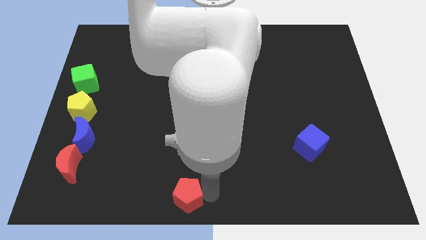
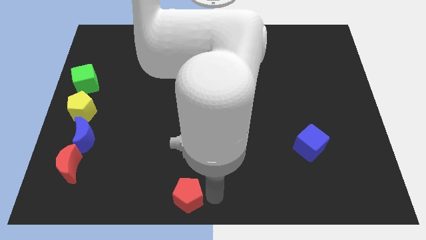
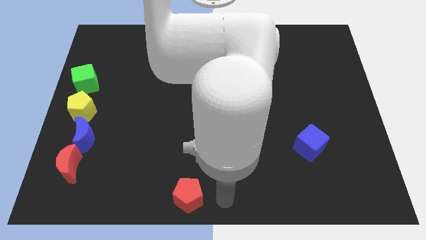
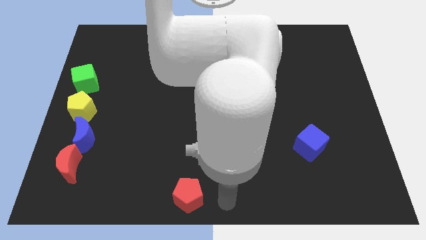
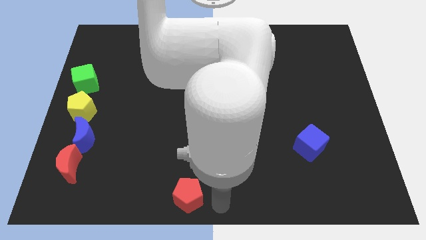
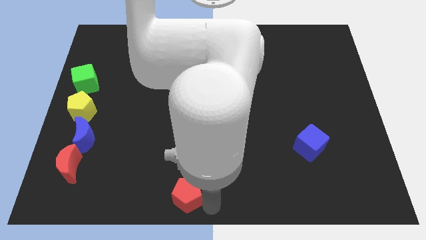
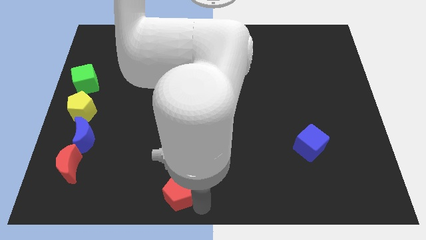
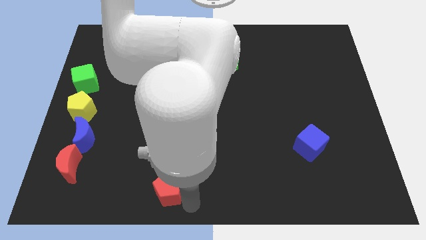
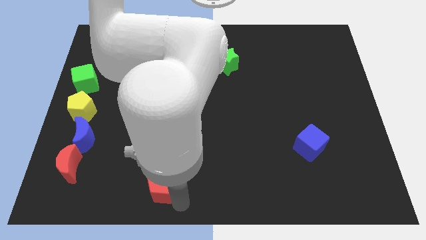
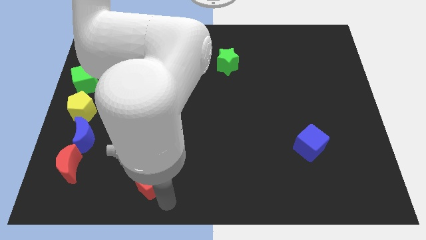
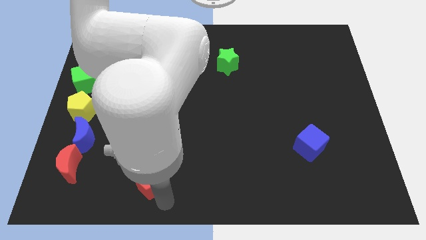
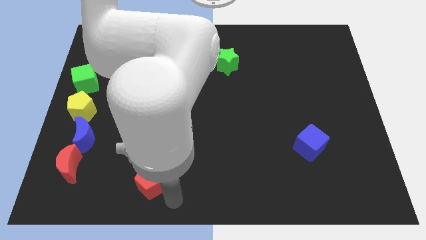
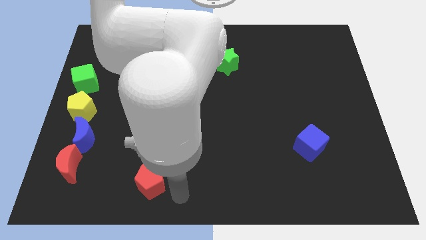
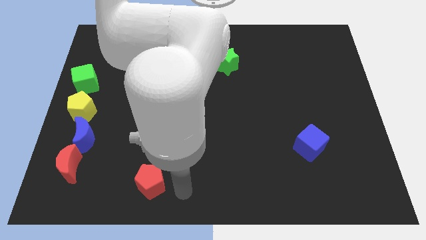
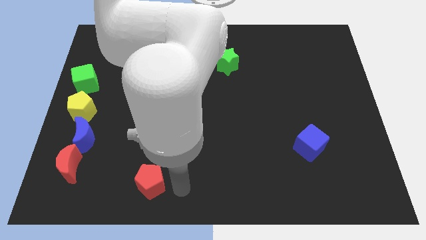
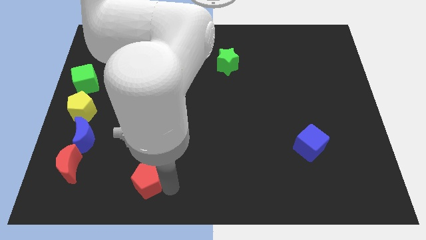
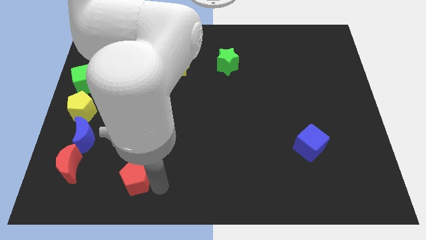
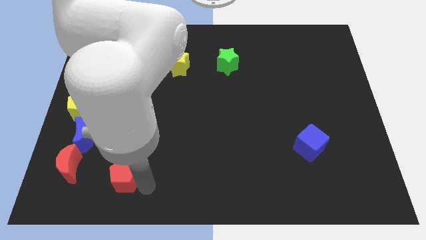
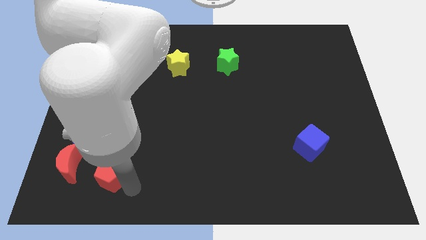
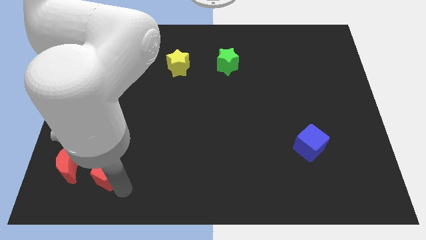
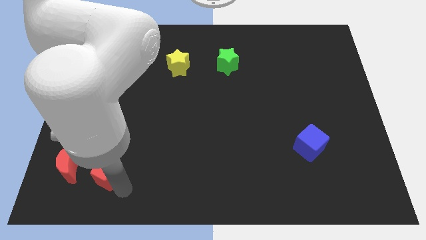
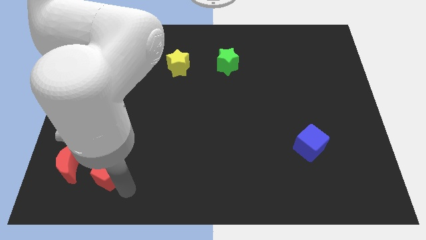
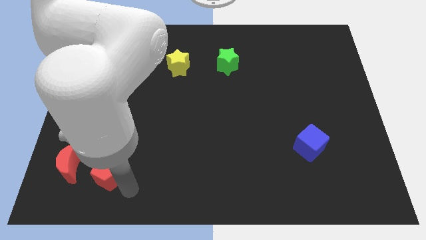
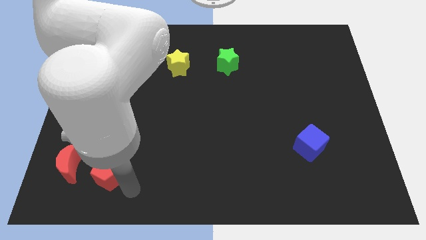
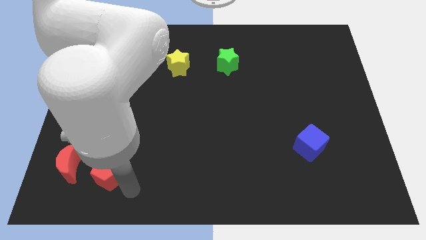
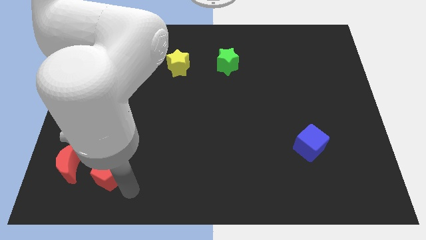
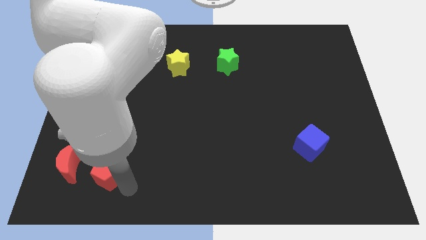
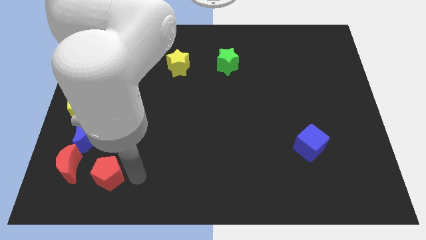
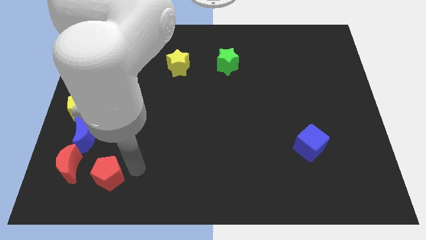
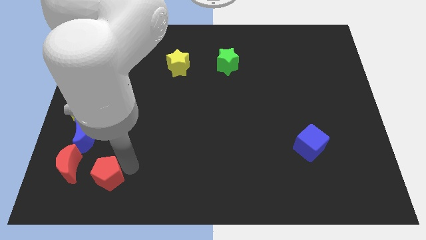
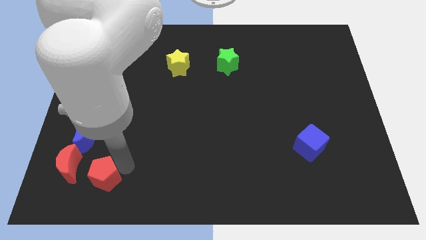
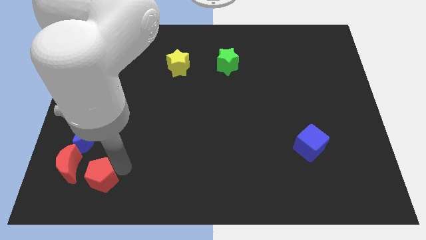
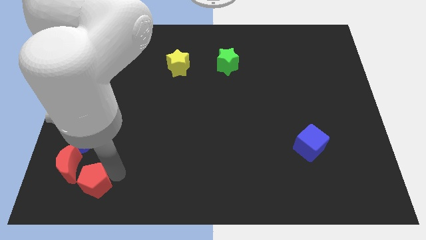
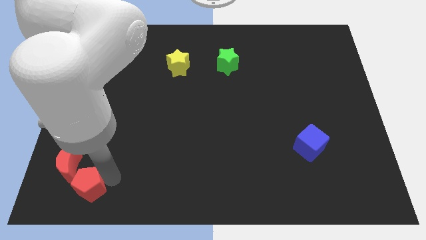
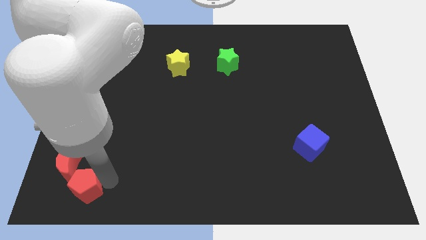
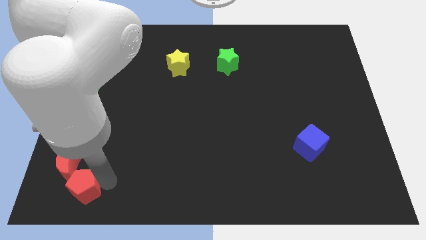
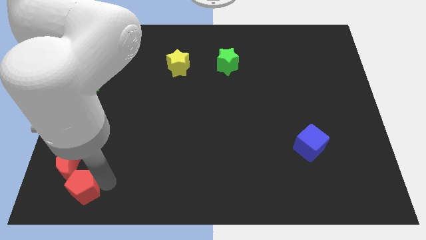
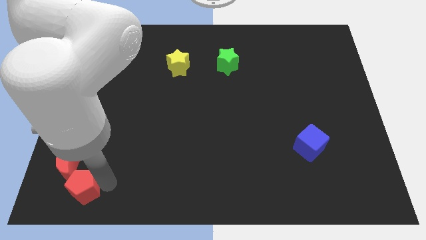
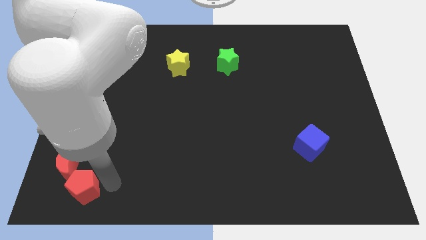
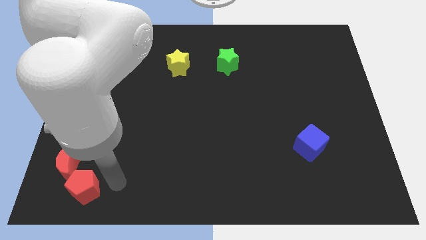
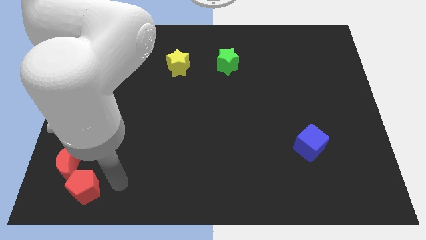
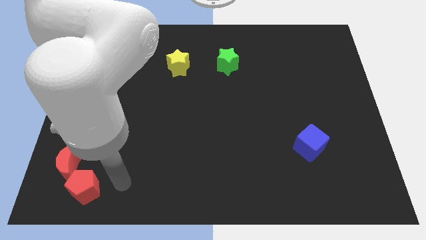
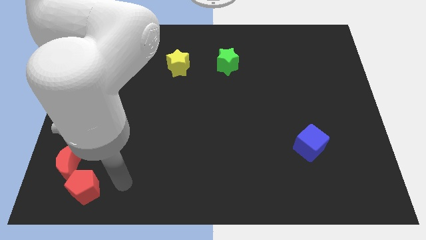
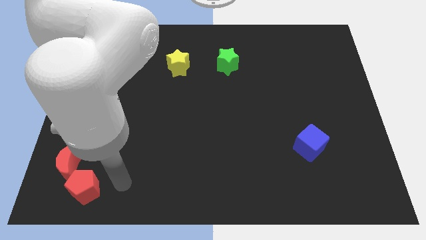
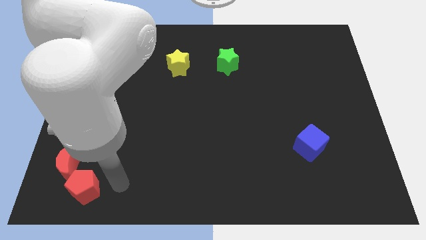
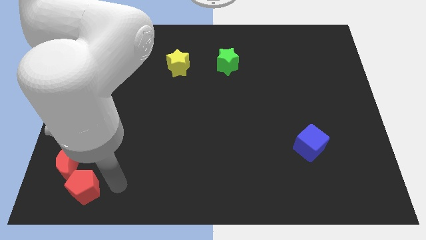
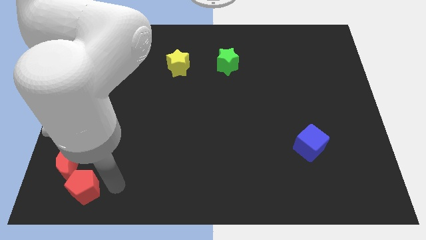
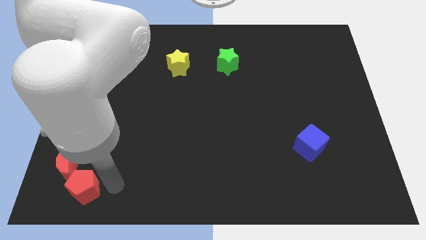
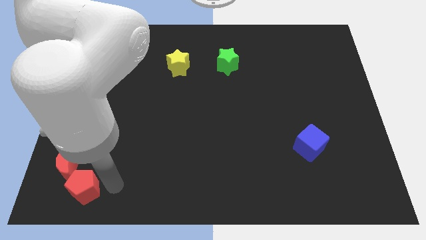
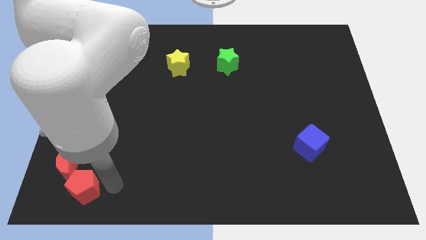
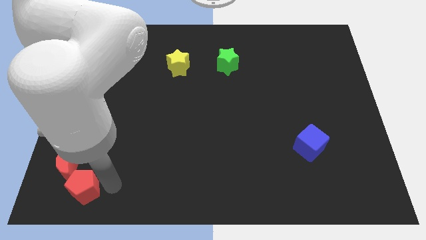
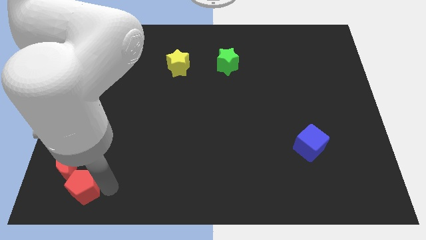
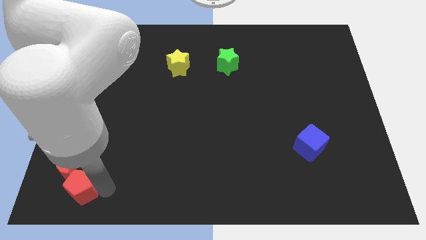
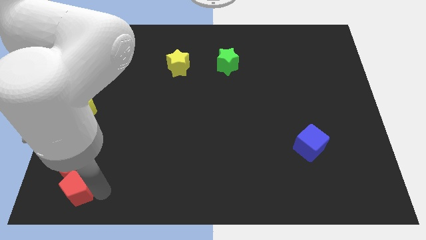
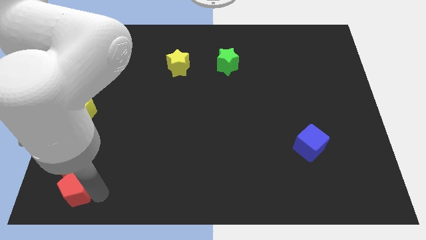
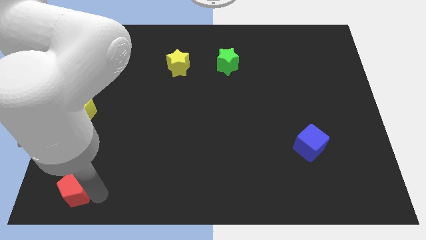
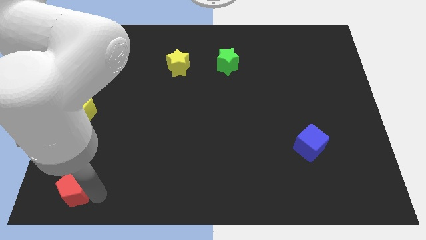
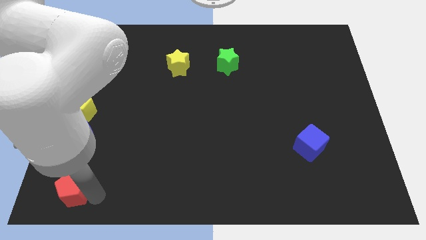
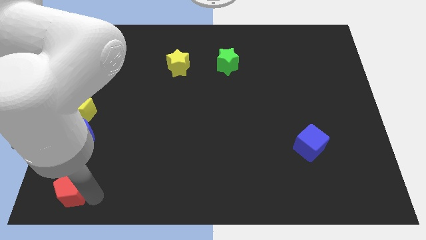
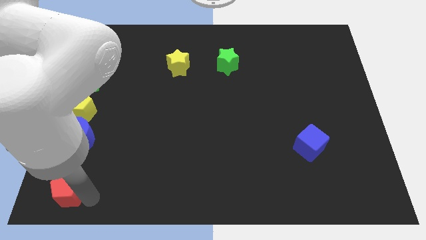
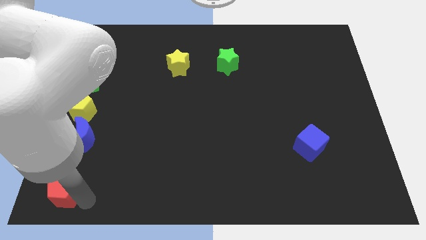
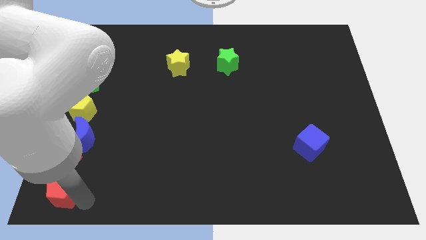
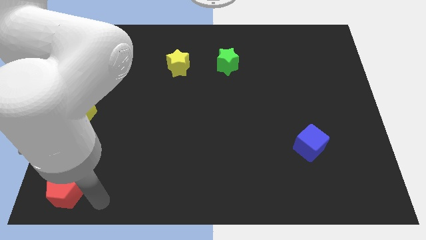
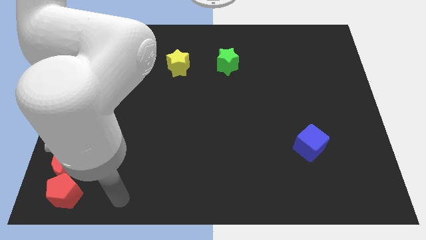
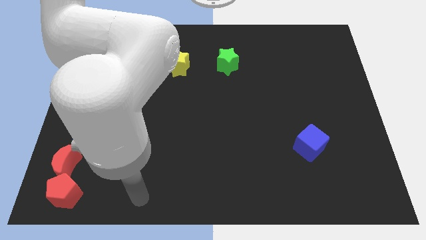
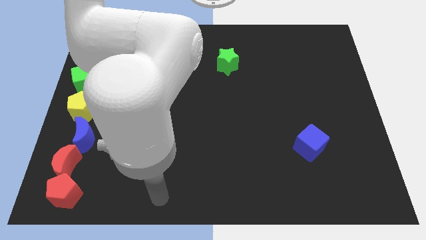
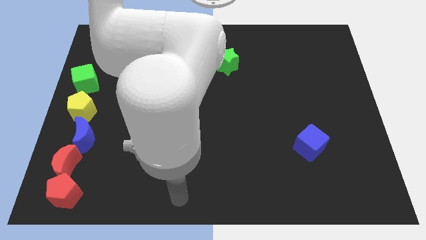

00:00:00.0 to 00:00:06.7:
move the red pentagon towards the bottom left corner

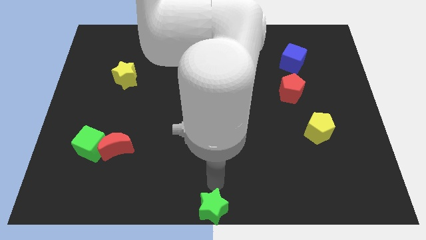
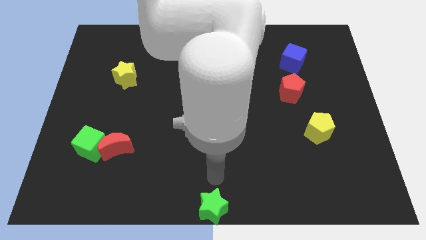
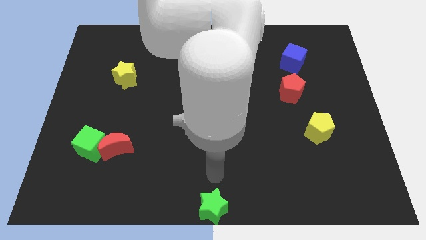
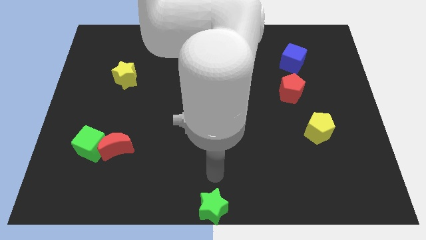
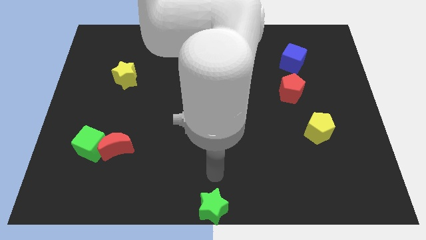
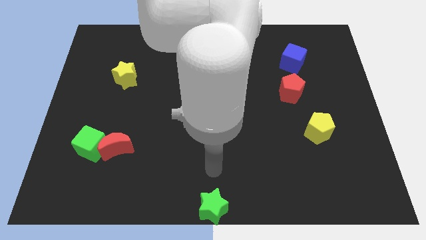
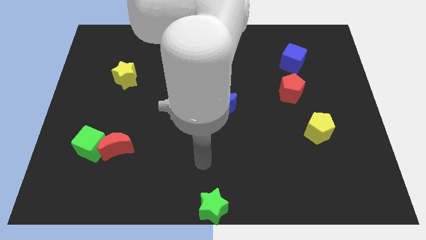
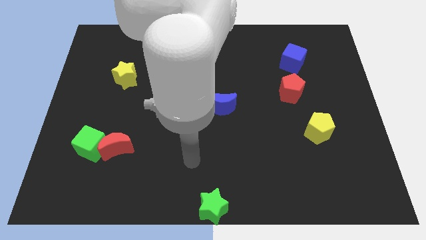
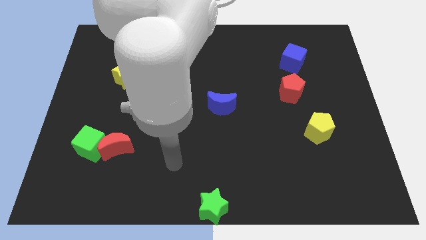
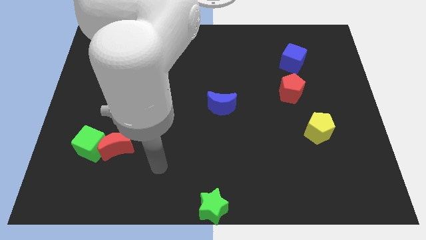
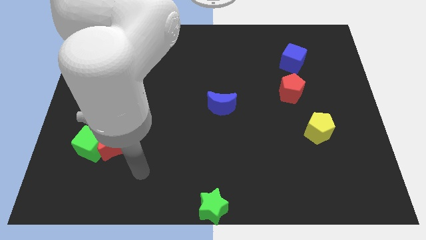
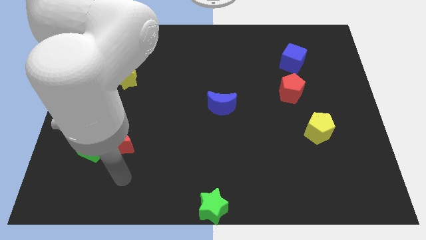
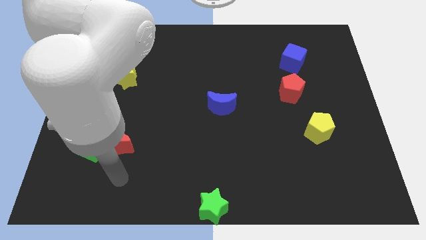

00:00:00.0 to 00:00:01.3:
push your arm to the left side of the board

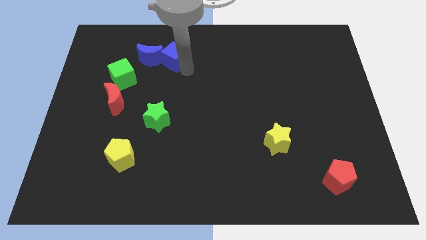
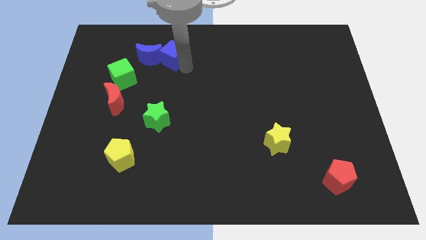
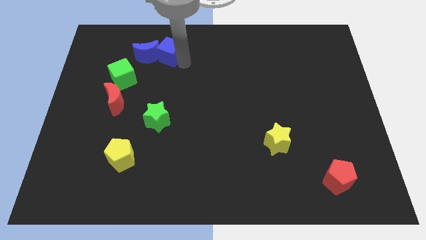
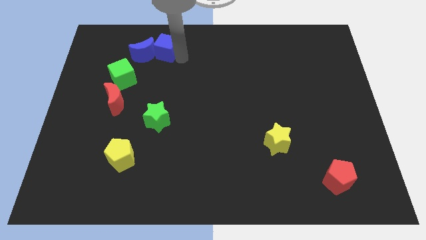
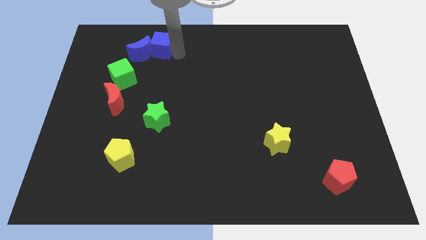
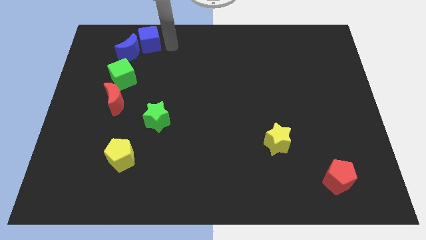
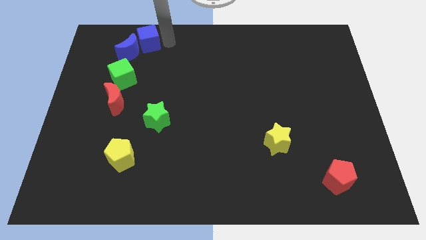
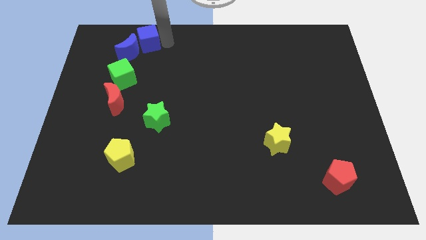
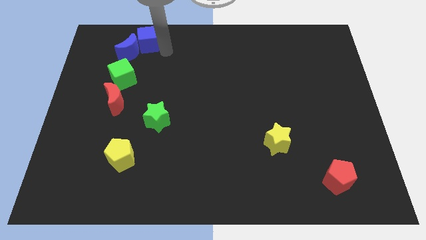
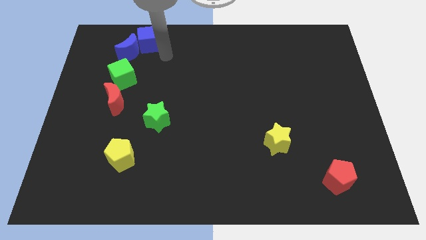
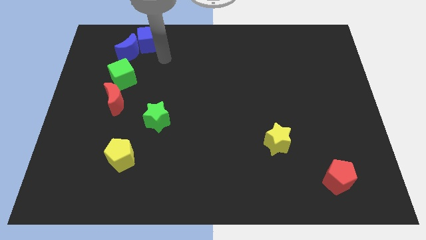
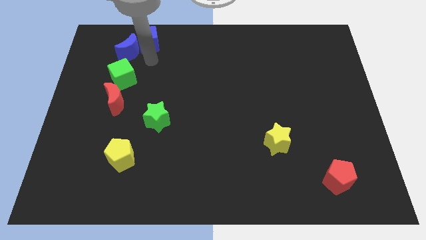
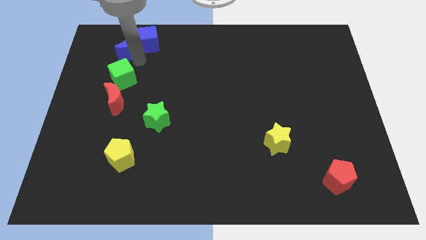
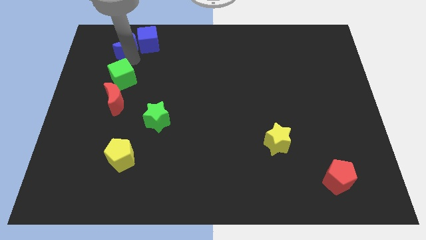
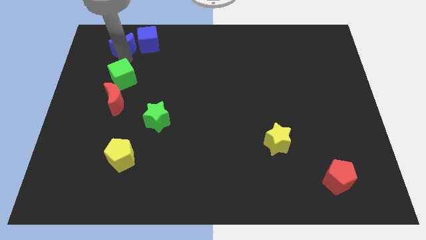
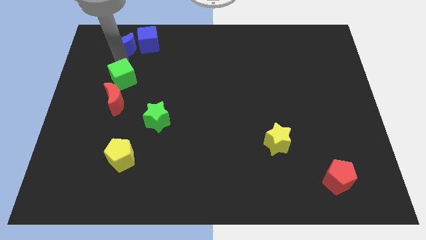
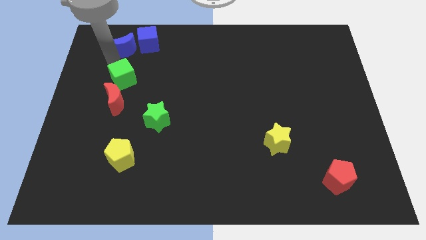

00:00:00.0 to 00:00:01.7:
move the blue blocks towards the top left of the board
